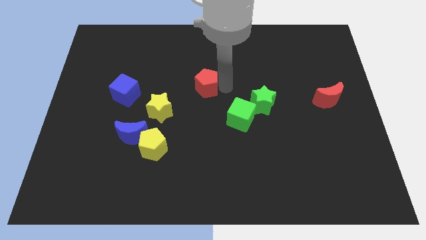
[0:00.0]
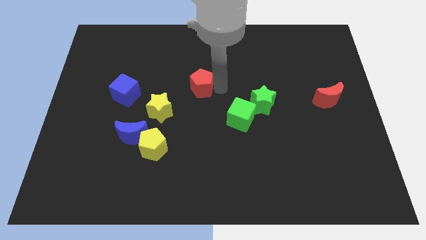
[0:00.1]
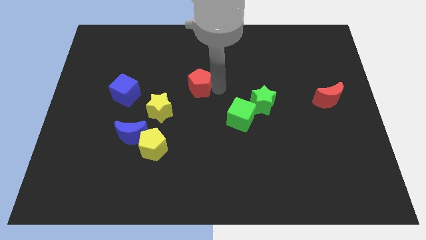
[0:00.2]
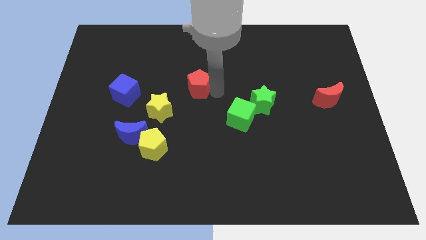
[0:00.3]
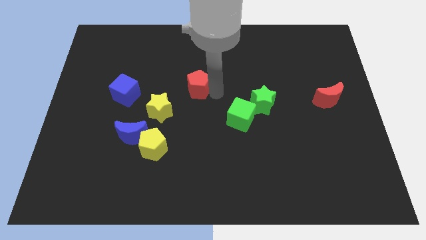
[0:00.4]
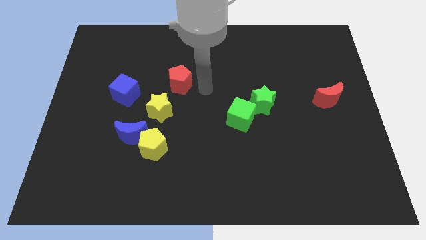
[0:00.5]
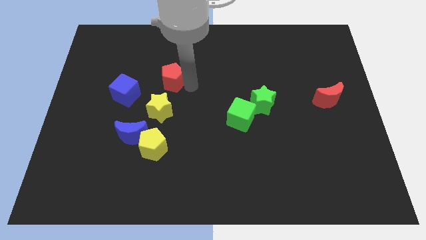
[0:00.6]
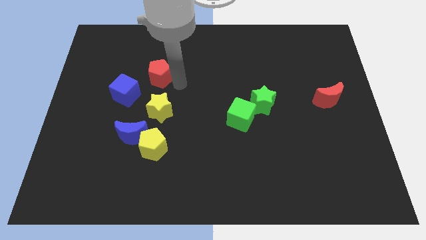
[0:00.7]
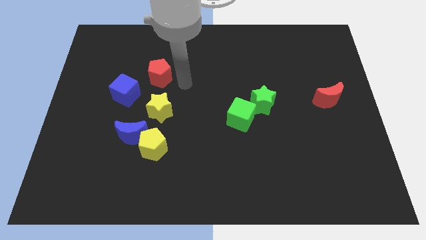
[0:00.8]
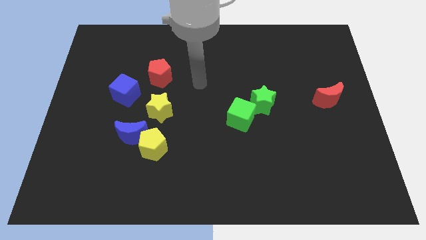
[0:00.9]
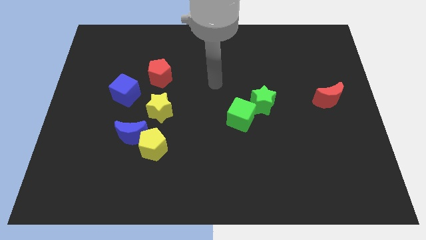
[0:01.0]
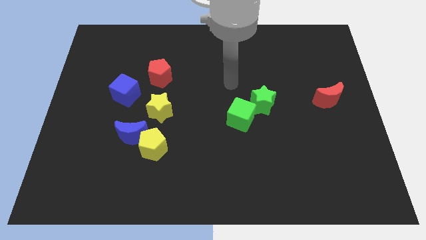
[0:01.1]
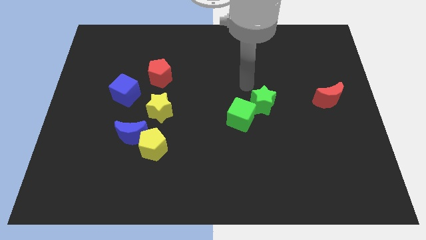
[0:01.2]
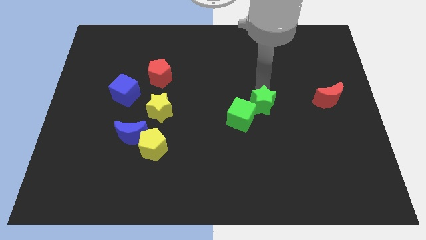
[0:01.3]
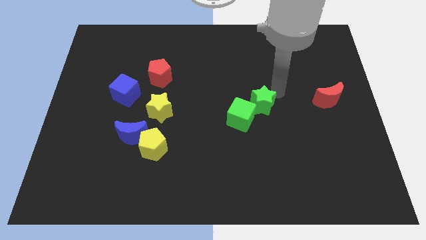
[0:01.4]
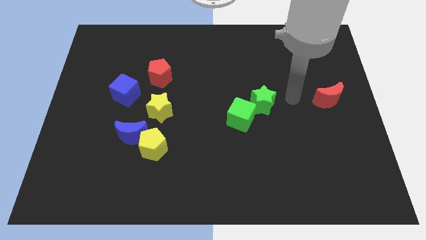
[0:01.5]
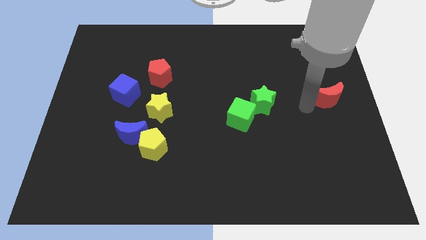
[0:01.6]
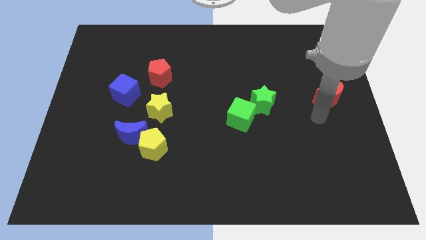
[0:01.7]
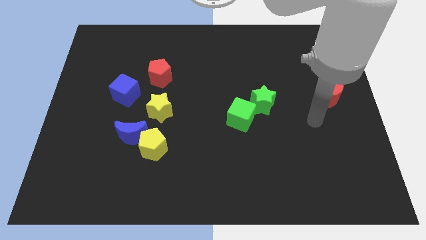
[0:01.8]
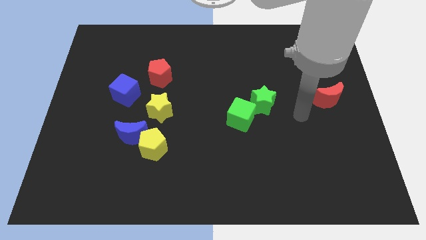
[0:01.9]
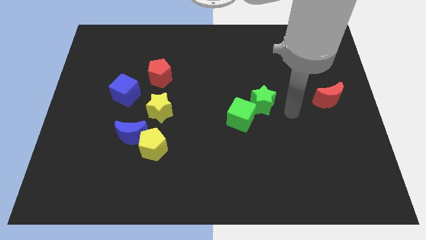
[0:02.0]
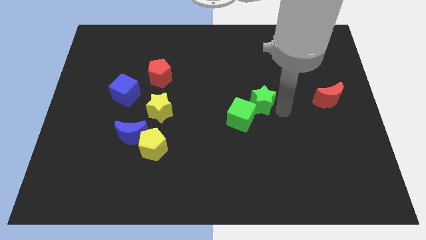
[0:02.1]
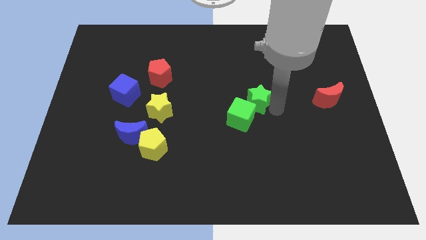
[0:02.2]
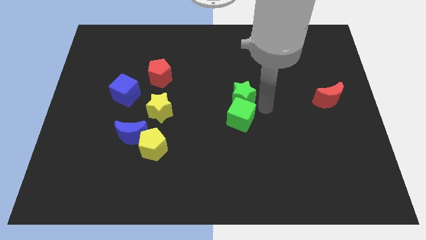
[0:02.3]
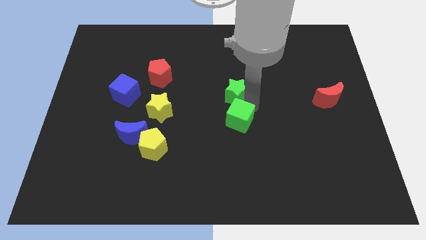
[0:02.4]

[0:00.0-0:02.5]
push green star above green cube

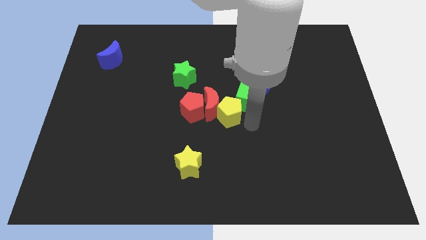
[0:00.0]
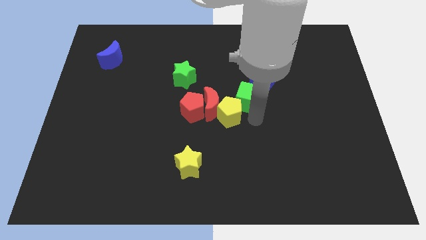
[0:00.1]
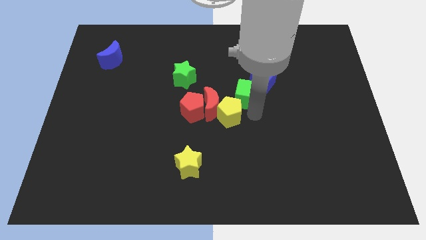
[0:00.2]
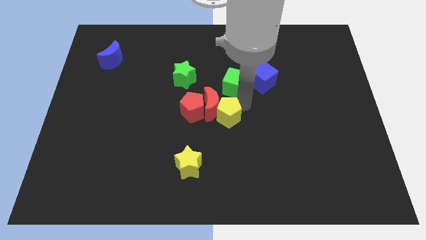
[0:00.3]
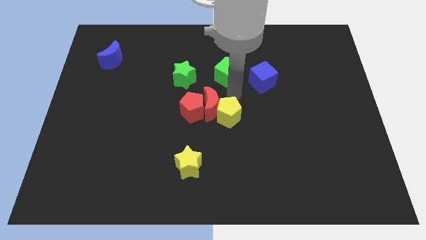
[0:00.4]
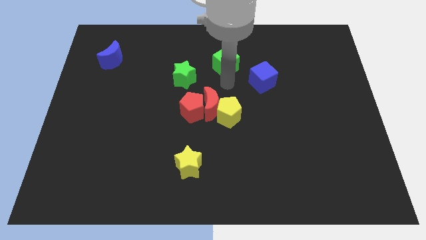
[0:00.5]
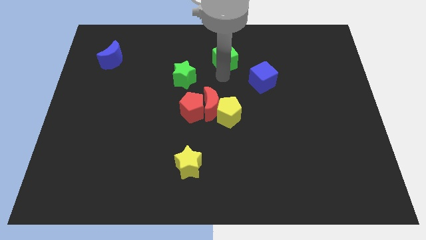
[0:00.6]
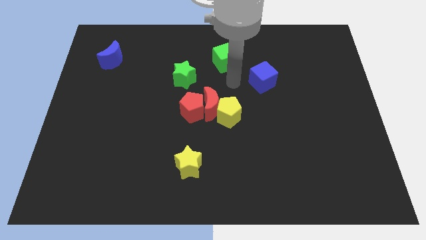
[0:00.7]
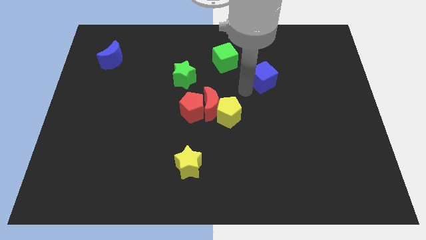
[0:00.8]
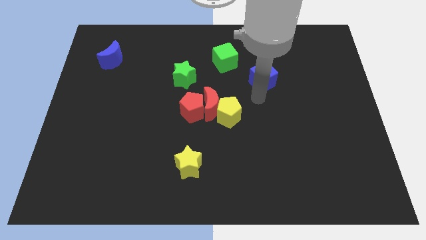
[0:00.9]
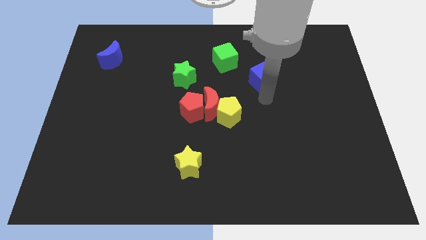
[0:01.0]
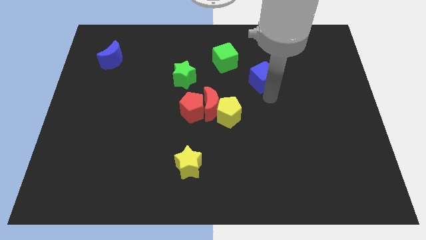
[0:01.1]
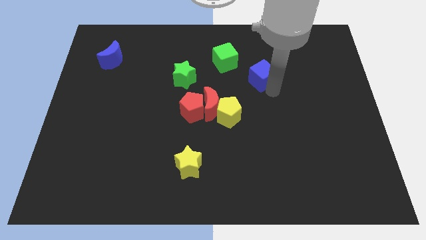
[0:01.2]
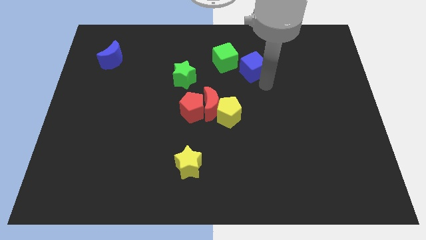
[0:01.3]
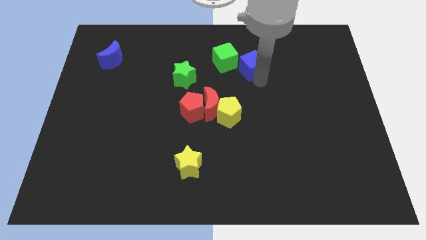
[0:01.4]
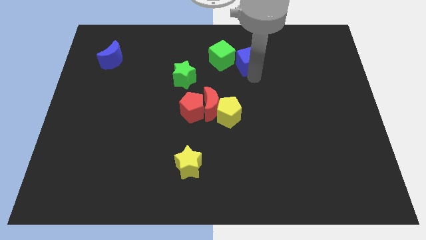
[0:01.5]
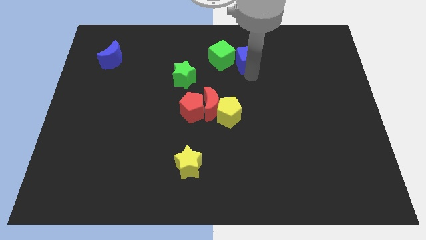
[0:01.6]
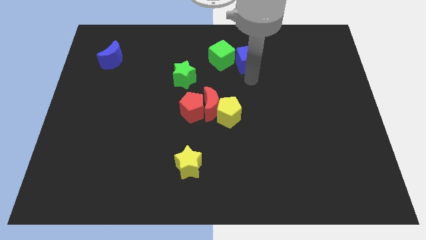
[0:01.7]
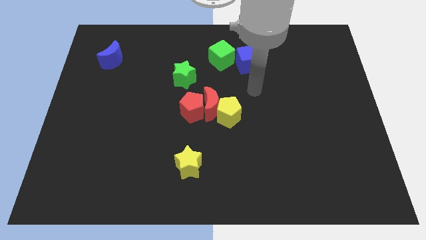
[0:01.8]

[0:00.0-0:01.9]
move the blue cube to the right of the green cube

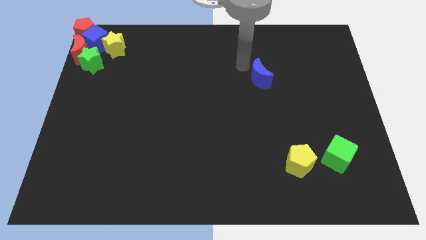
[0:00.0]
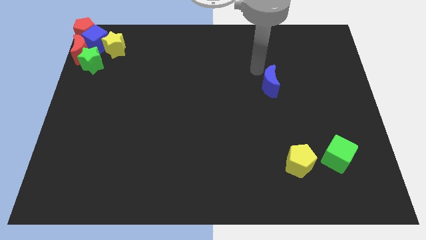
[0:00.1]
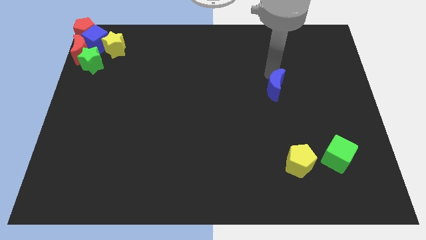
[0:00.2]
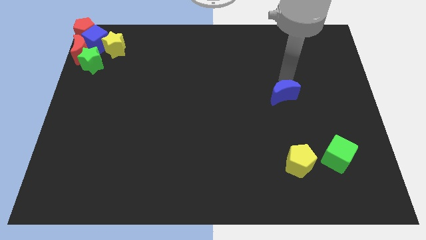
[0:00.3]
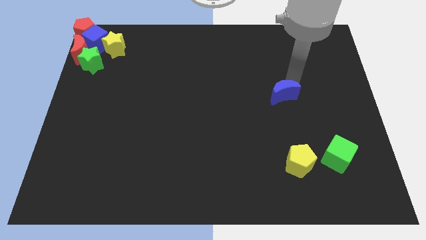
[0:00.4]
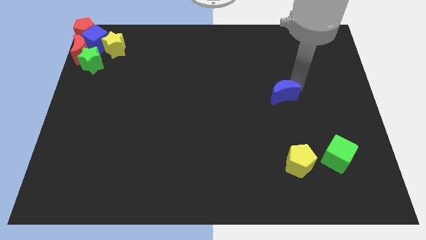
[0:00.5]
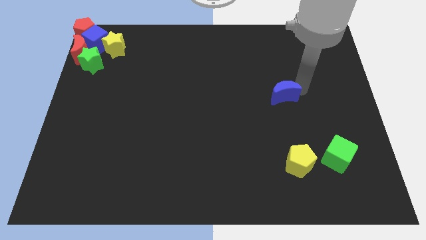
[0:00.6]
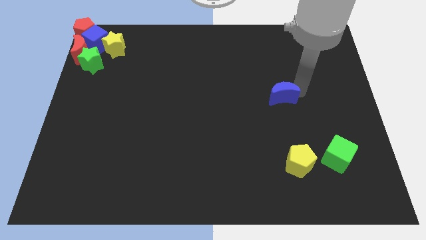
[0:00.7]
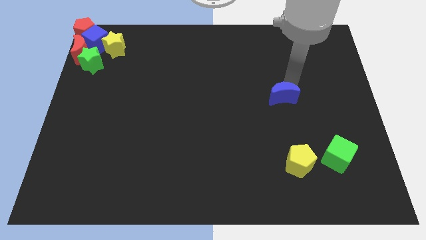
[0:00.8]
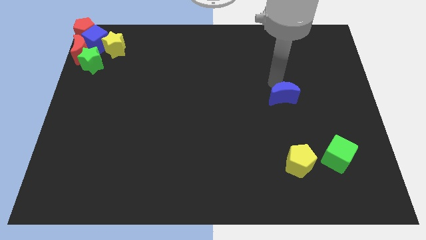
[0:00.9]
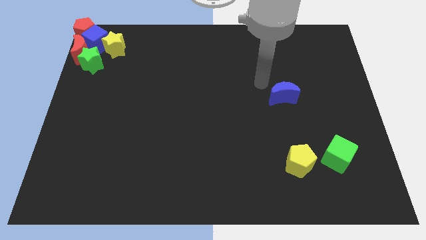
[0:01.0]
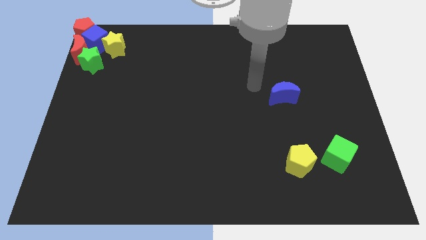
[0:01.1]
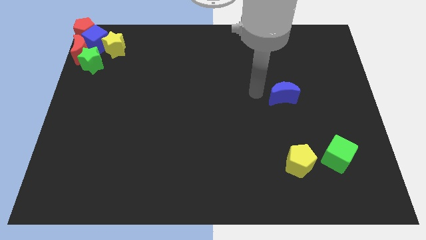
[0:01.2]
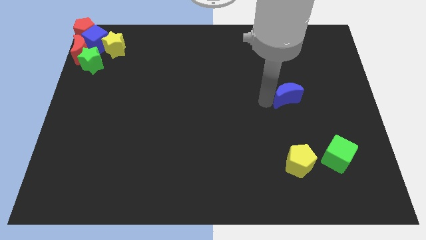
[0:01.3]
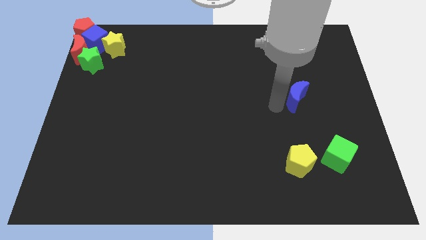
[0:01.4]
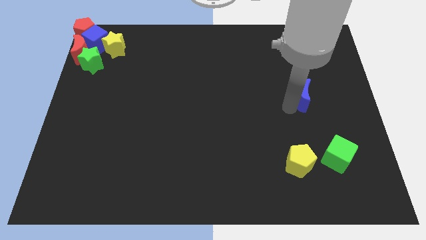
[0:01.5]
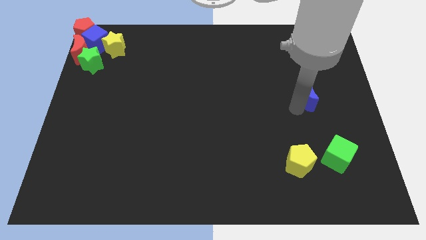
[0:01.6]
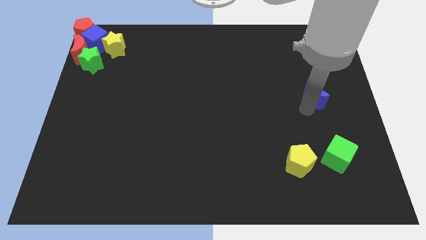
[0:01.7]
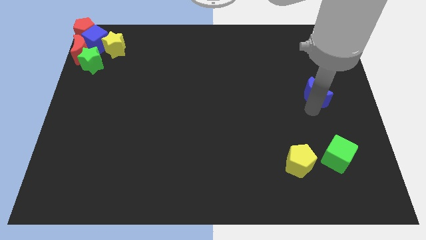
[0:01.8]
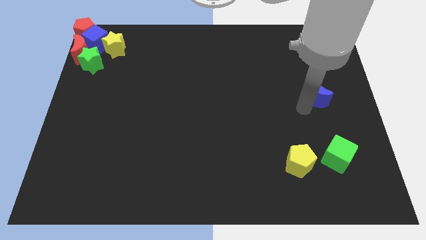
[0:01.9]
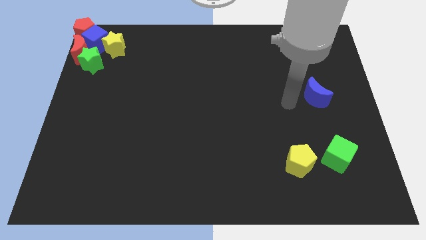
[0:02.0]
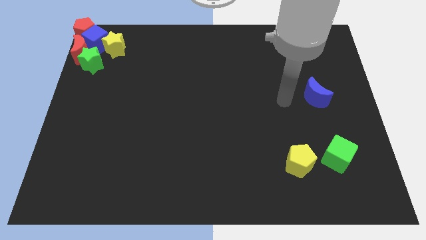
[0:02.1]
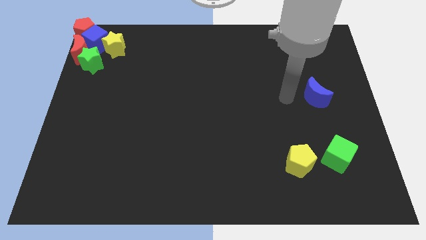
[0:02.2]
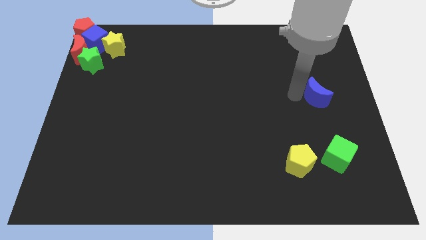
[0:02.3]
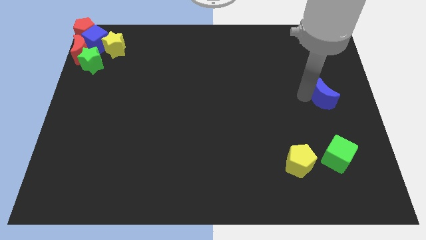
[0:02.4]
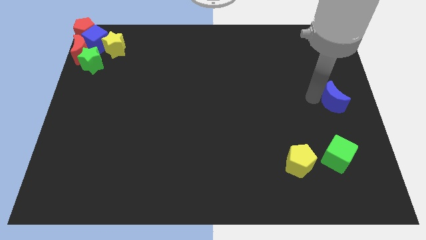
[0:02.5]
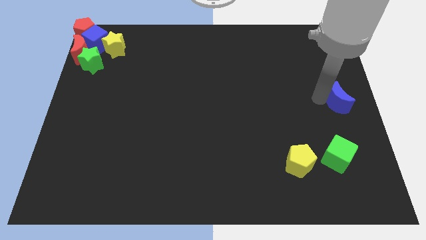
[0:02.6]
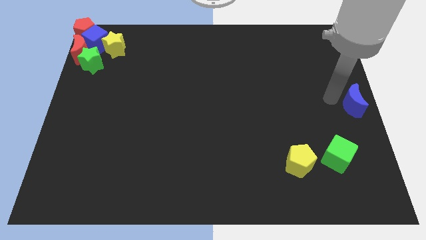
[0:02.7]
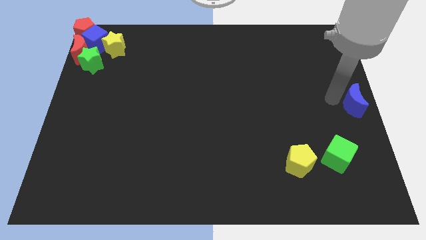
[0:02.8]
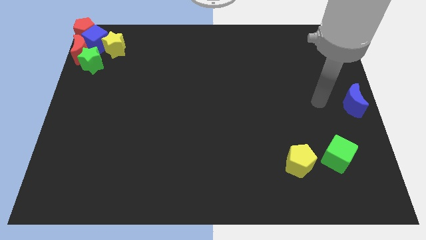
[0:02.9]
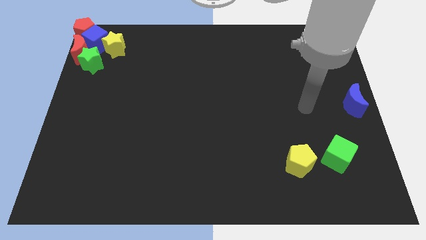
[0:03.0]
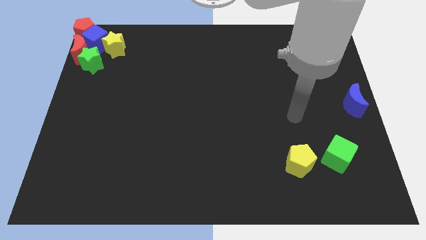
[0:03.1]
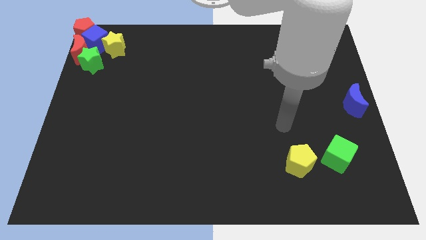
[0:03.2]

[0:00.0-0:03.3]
move blue crescent to the right center of the board

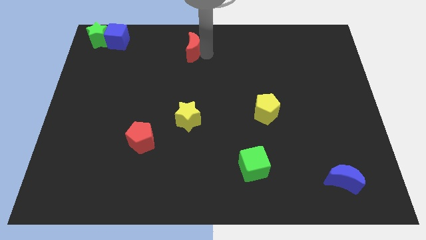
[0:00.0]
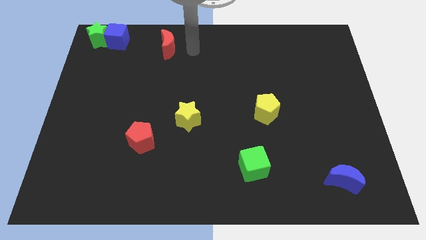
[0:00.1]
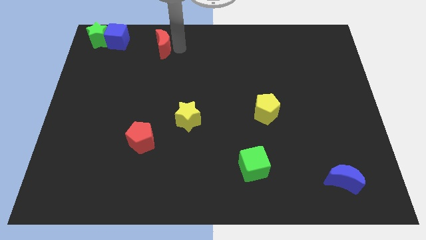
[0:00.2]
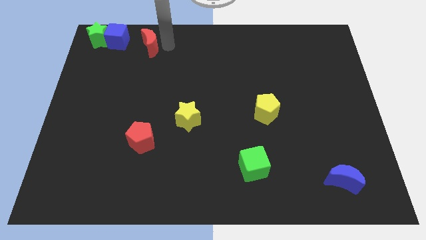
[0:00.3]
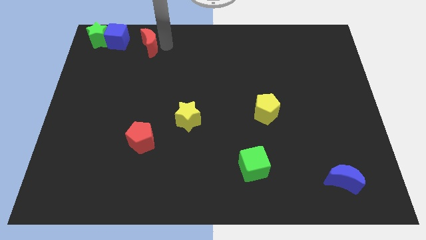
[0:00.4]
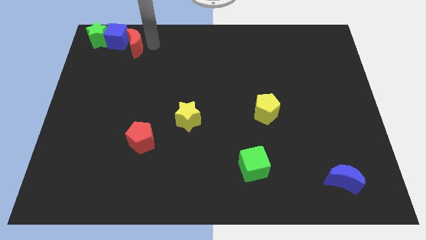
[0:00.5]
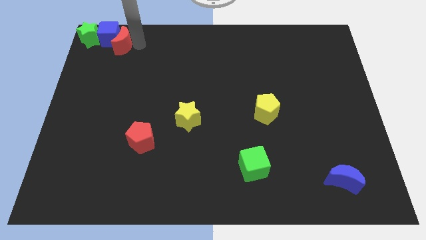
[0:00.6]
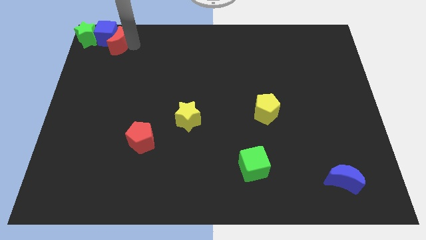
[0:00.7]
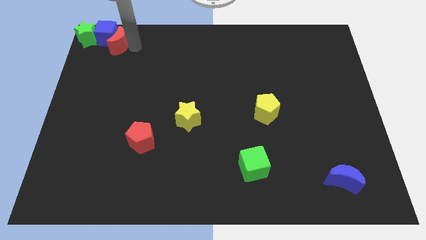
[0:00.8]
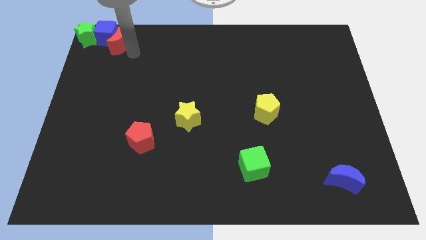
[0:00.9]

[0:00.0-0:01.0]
push red crescent into blue cube

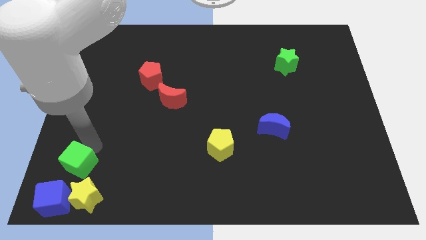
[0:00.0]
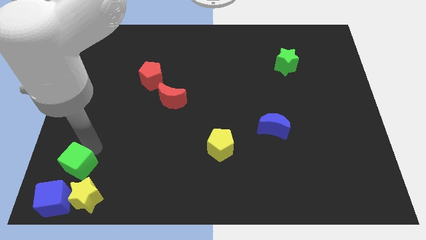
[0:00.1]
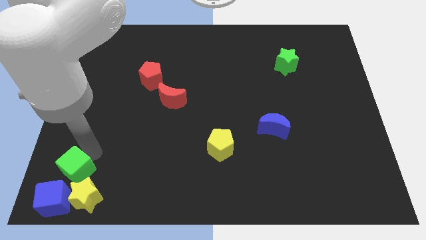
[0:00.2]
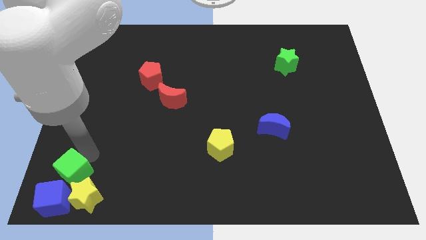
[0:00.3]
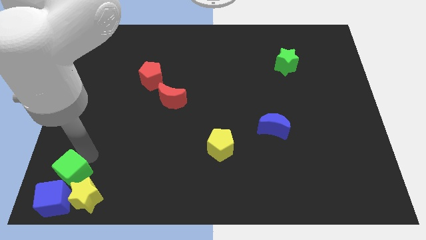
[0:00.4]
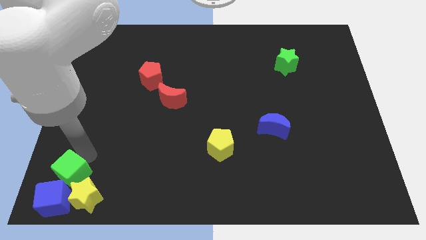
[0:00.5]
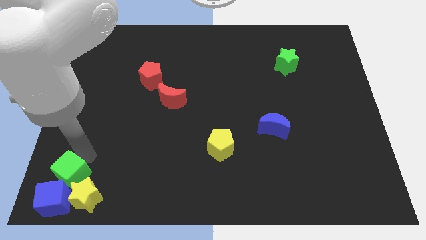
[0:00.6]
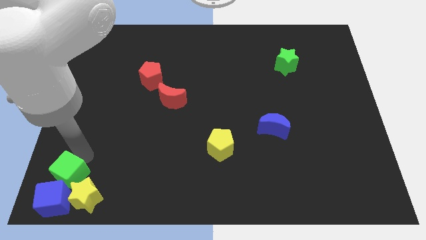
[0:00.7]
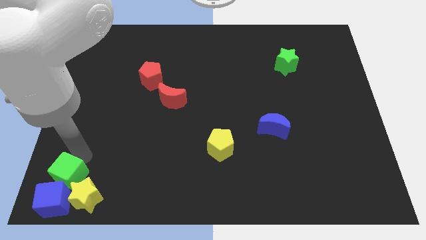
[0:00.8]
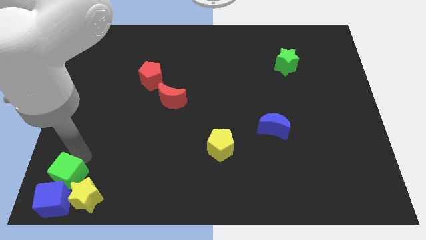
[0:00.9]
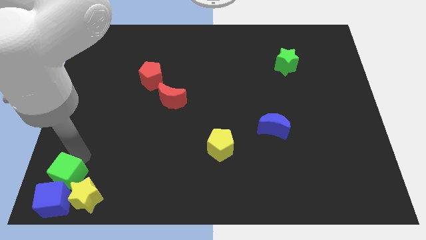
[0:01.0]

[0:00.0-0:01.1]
place the green cube above the blue cube
